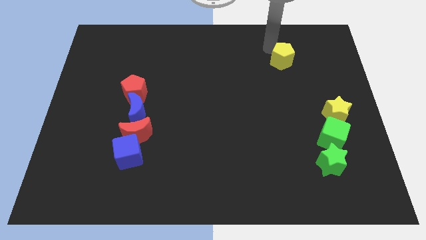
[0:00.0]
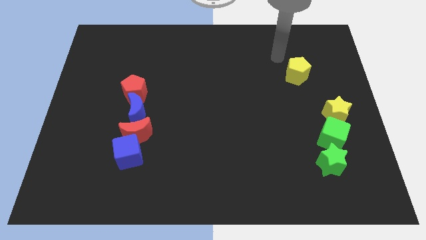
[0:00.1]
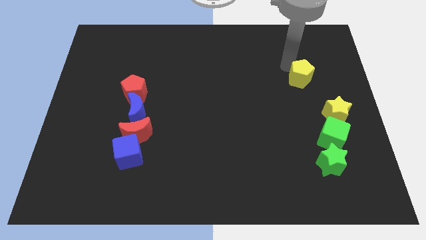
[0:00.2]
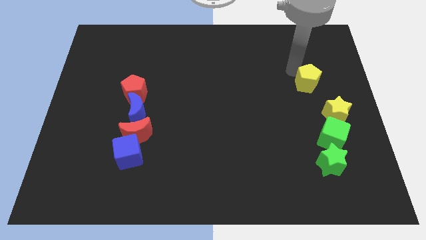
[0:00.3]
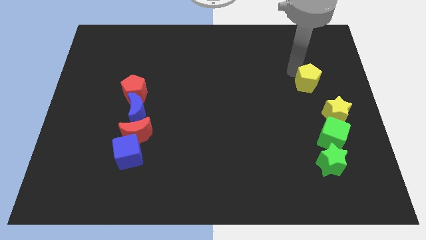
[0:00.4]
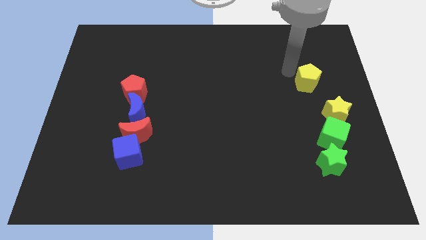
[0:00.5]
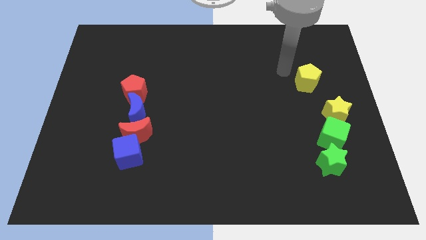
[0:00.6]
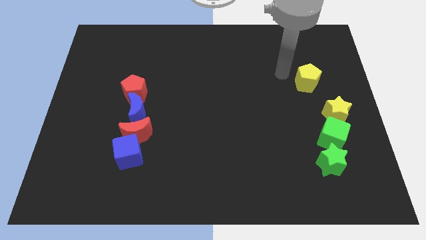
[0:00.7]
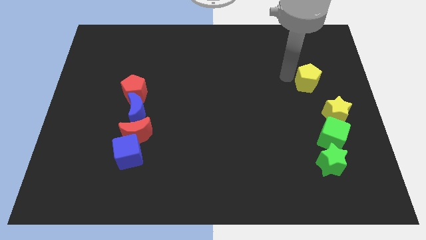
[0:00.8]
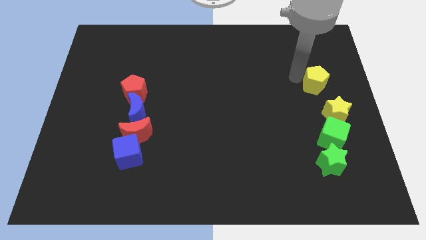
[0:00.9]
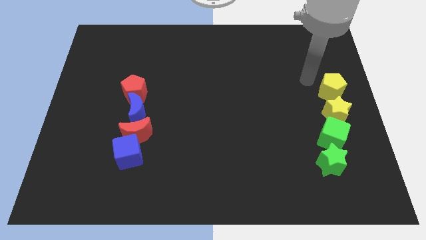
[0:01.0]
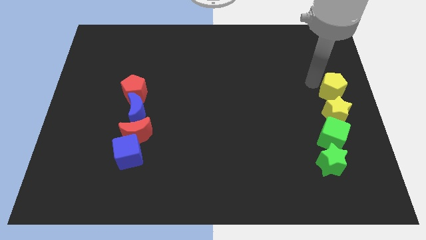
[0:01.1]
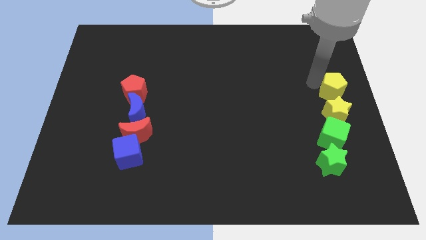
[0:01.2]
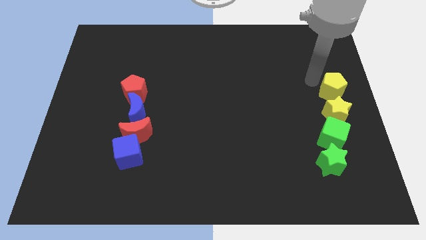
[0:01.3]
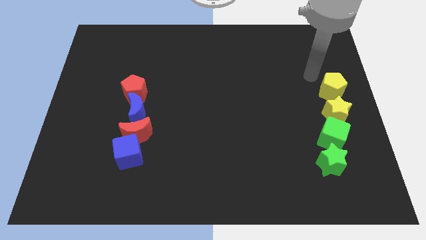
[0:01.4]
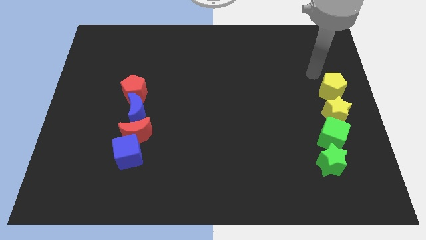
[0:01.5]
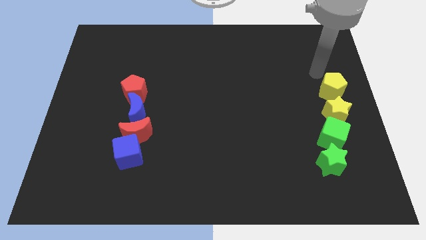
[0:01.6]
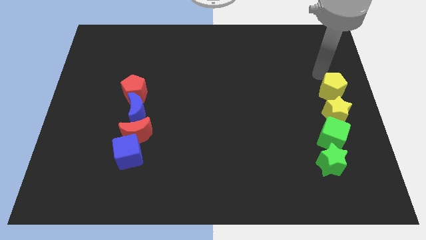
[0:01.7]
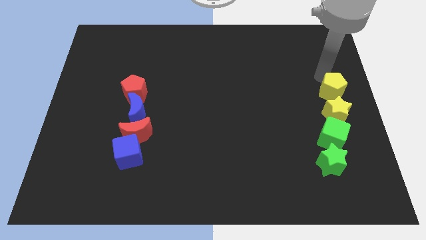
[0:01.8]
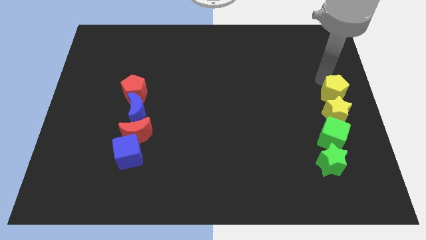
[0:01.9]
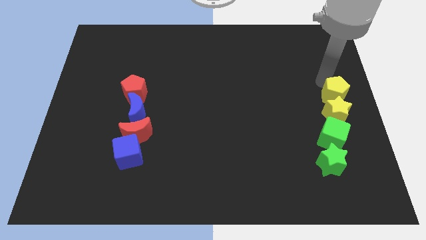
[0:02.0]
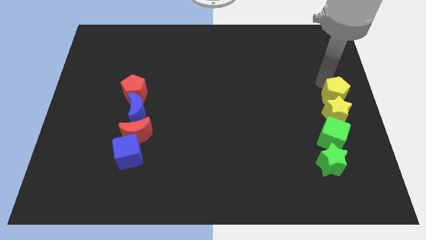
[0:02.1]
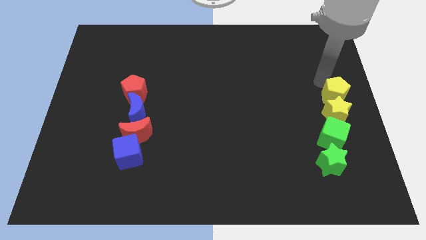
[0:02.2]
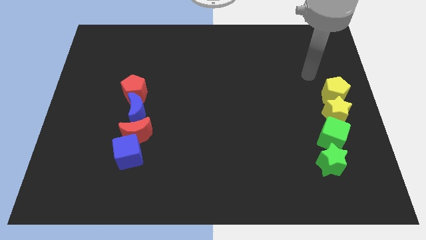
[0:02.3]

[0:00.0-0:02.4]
move the yellow pentagon above the yellow star

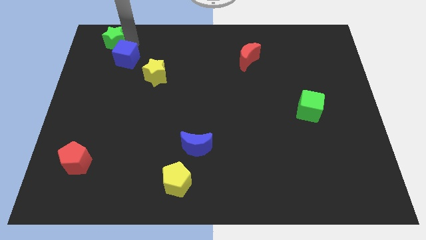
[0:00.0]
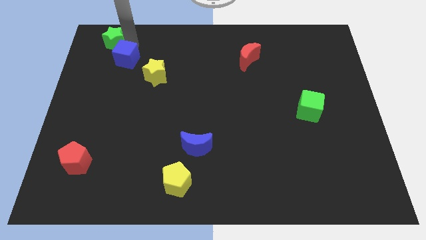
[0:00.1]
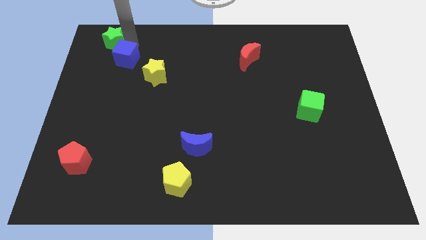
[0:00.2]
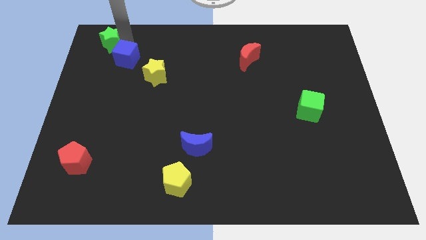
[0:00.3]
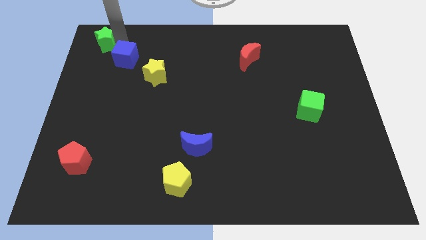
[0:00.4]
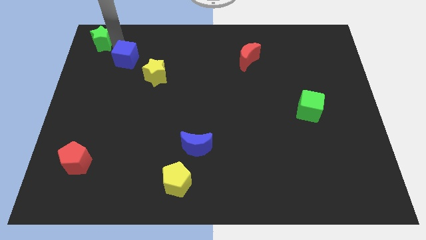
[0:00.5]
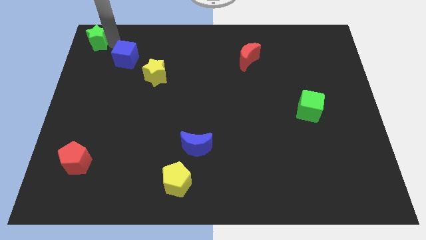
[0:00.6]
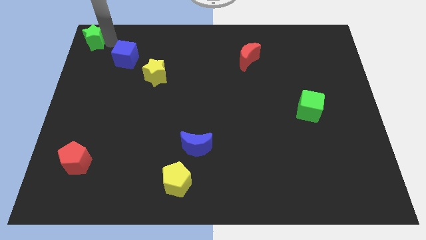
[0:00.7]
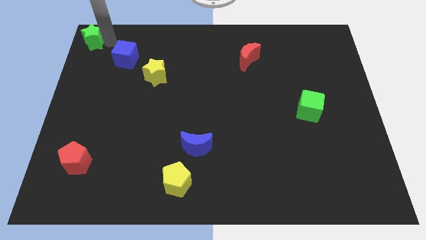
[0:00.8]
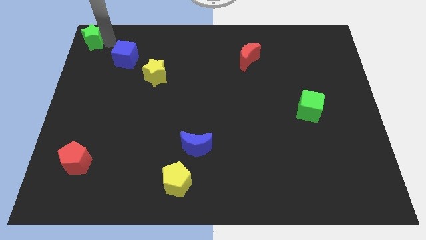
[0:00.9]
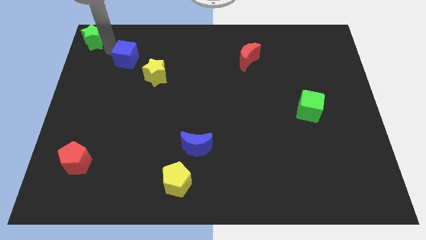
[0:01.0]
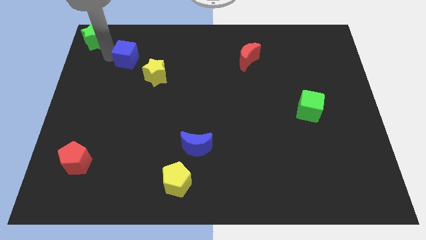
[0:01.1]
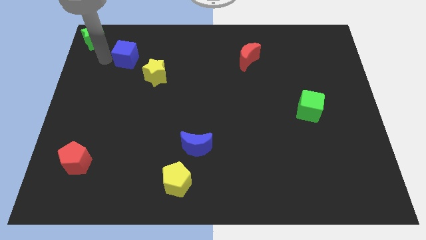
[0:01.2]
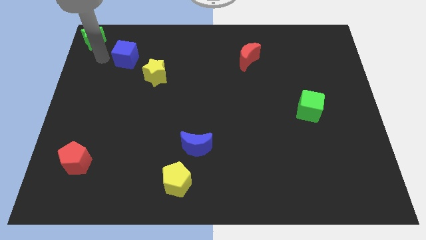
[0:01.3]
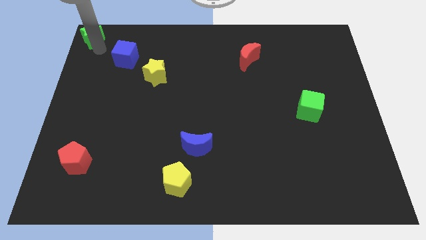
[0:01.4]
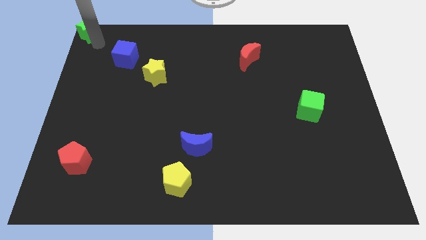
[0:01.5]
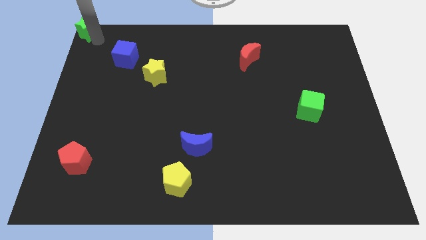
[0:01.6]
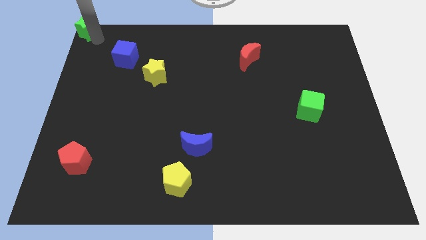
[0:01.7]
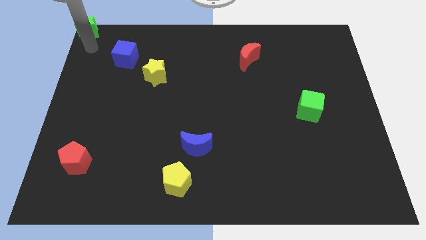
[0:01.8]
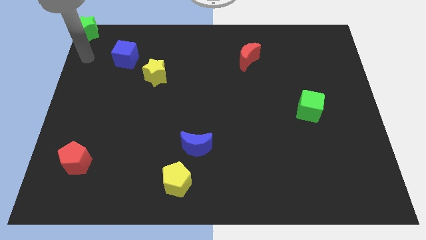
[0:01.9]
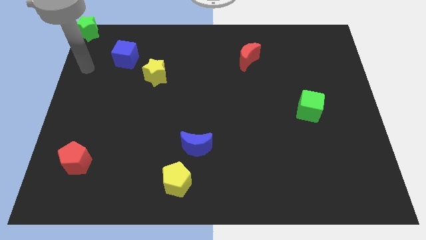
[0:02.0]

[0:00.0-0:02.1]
place the green star to the top left corner

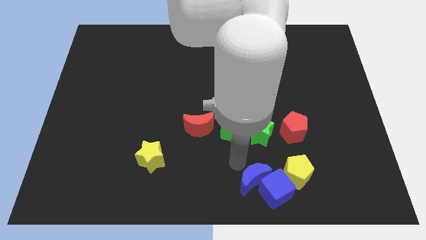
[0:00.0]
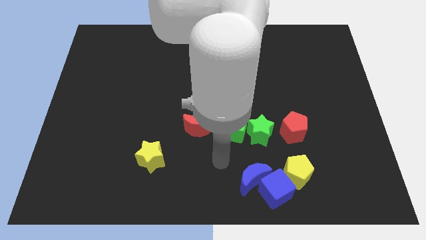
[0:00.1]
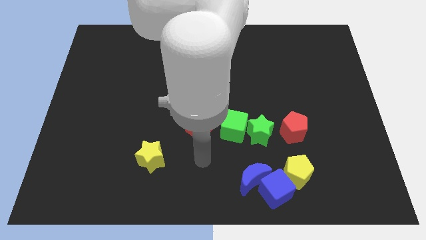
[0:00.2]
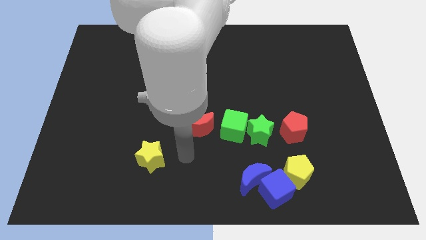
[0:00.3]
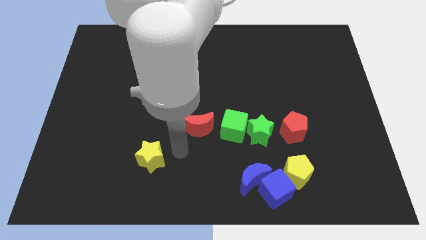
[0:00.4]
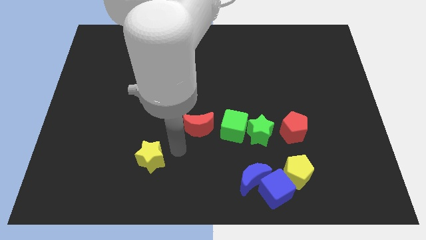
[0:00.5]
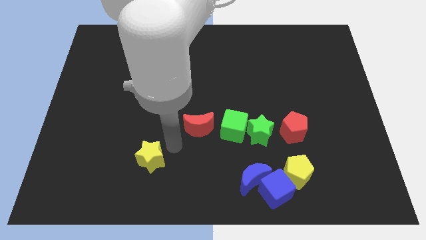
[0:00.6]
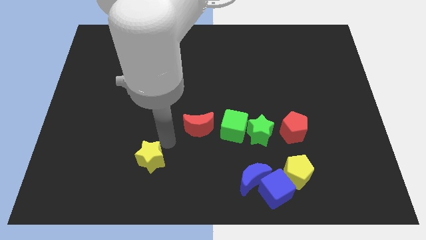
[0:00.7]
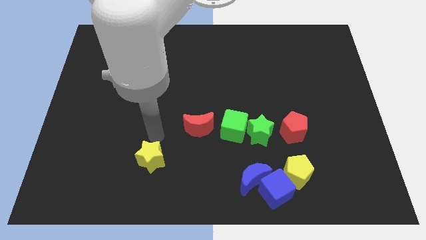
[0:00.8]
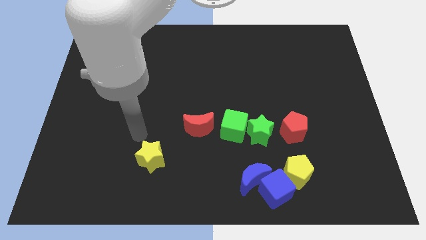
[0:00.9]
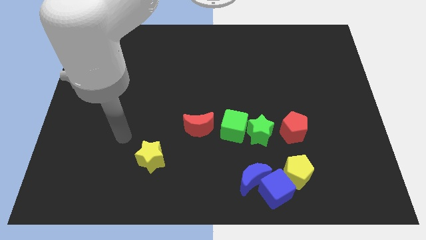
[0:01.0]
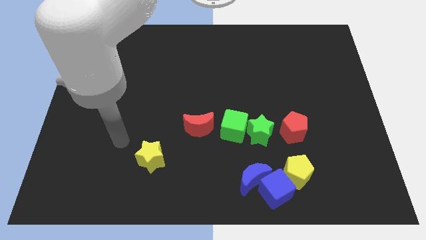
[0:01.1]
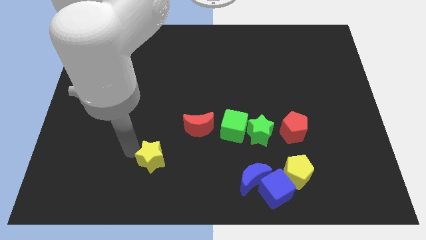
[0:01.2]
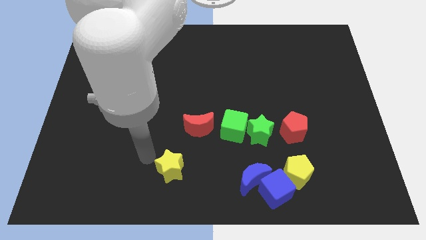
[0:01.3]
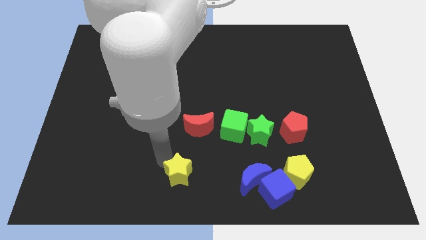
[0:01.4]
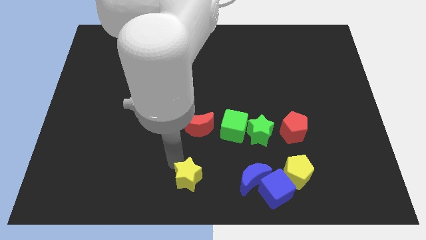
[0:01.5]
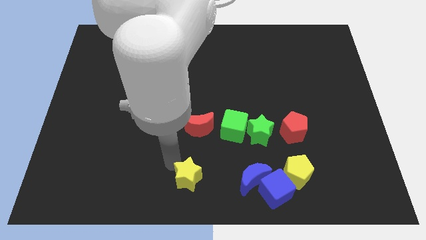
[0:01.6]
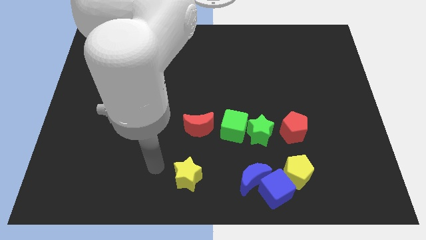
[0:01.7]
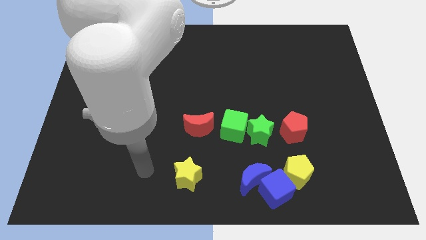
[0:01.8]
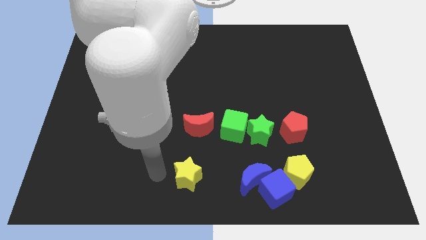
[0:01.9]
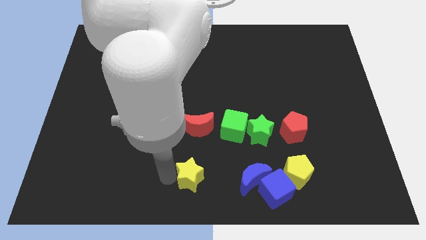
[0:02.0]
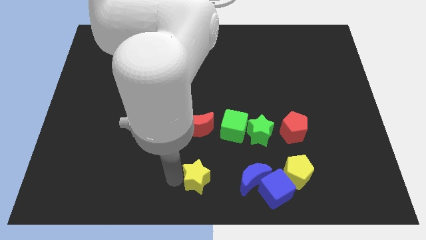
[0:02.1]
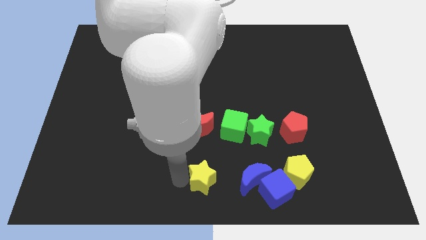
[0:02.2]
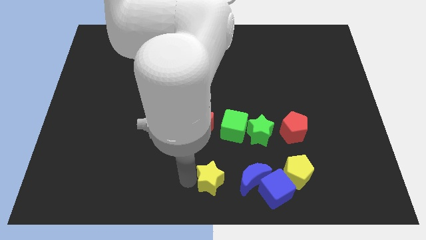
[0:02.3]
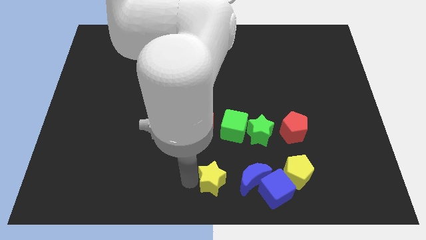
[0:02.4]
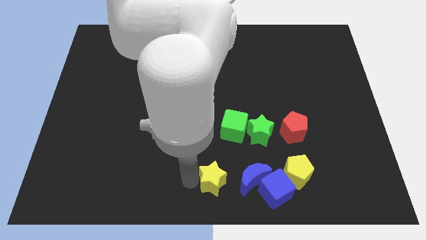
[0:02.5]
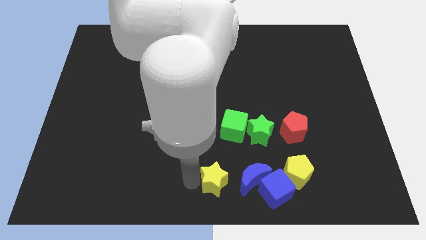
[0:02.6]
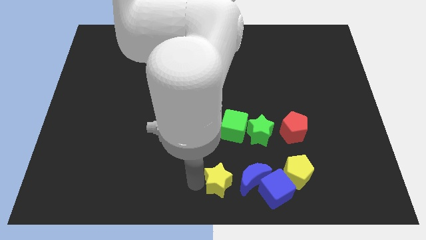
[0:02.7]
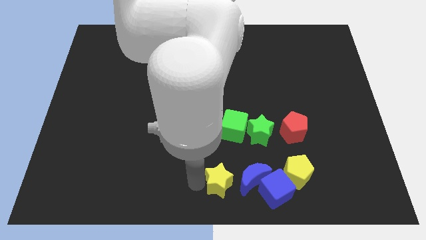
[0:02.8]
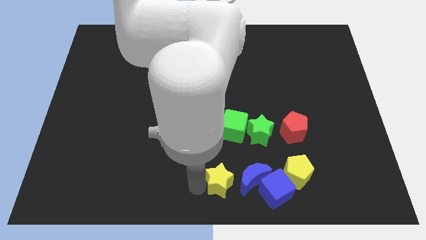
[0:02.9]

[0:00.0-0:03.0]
place the yellow star to the left of the blue crescent

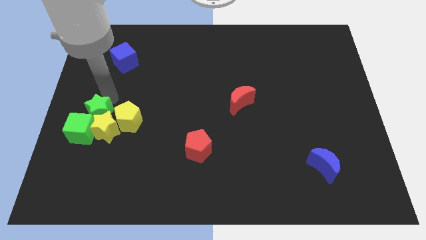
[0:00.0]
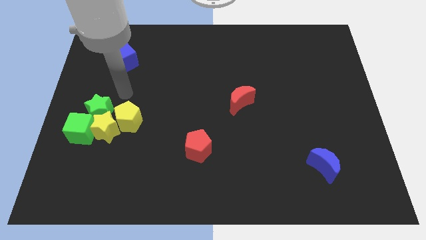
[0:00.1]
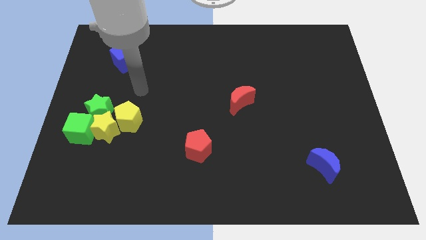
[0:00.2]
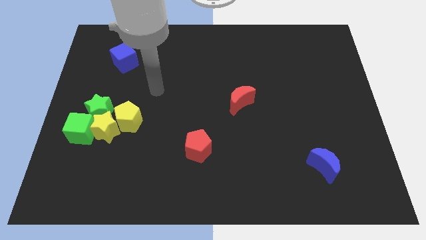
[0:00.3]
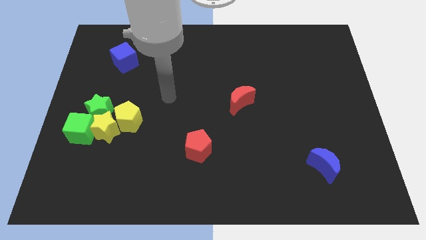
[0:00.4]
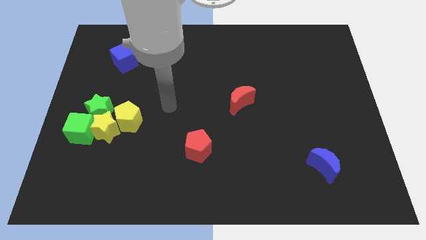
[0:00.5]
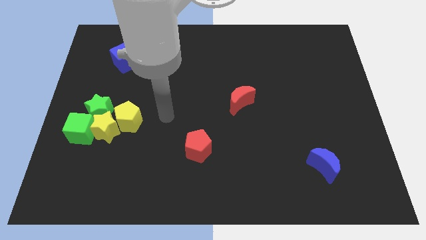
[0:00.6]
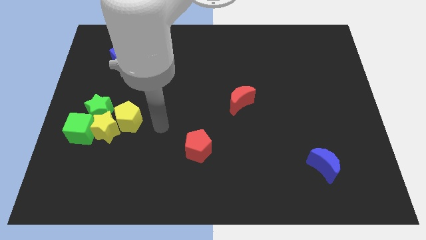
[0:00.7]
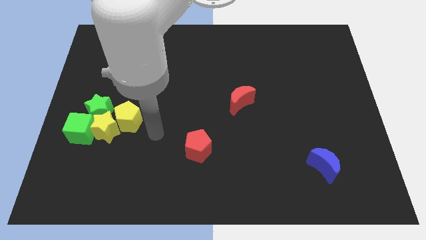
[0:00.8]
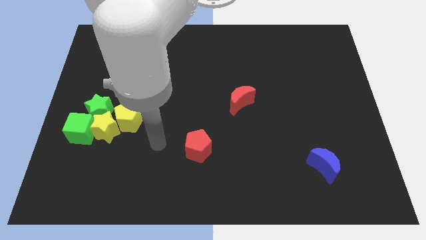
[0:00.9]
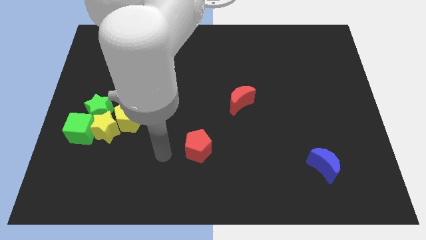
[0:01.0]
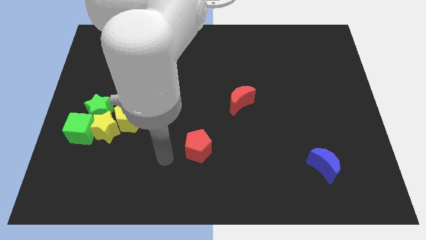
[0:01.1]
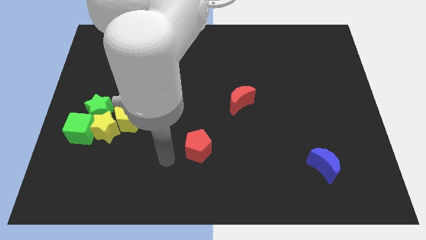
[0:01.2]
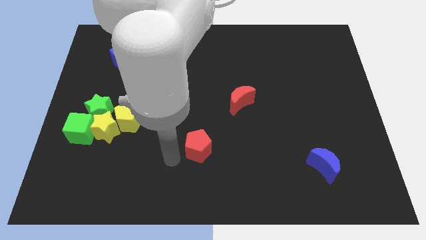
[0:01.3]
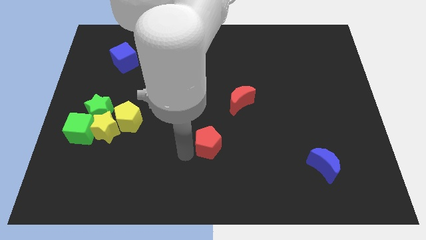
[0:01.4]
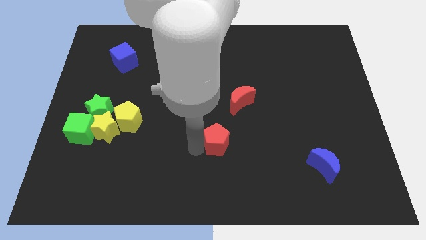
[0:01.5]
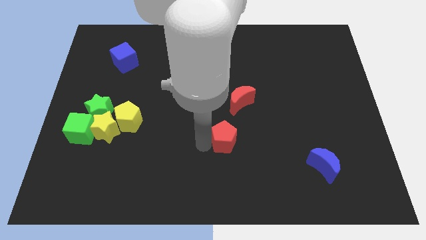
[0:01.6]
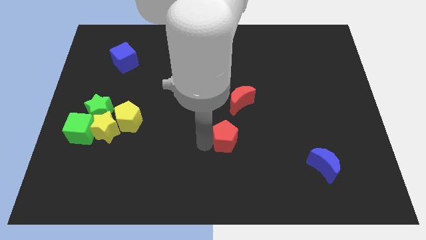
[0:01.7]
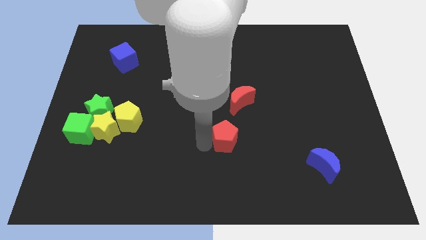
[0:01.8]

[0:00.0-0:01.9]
move the arm away from the green star
